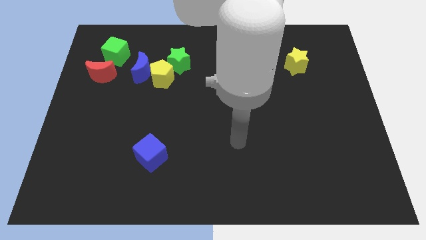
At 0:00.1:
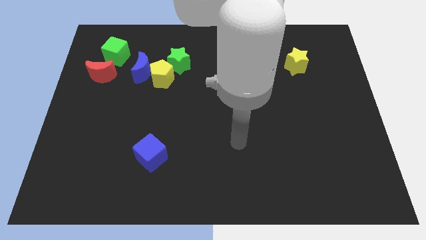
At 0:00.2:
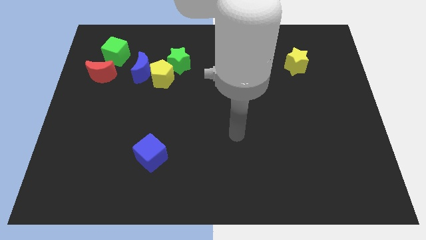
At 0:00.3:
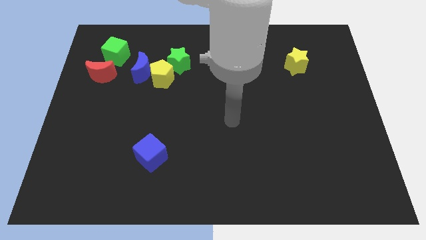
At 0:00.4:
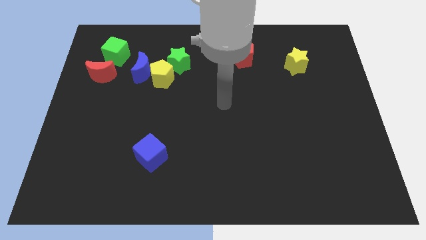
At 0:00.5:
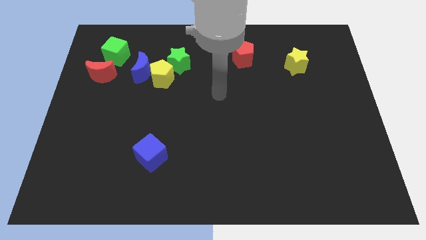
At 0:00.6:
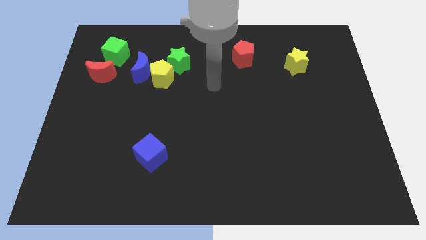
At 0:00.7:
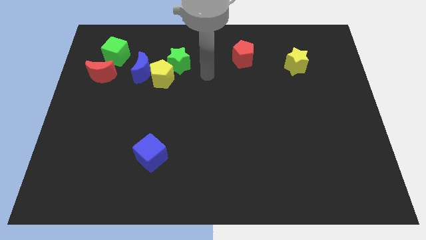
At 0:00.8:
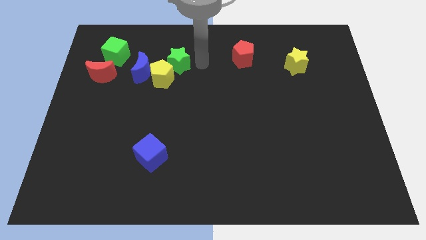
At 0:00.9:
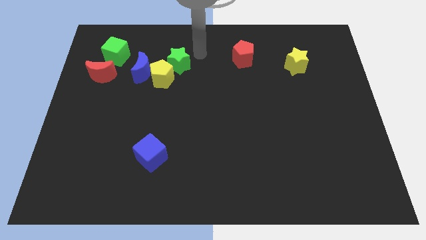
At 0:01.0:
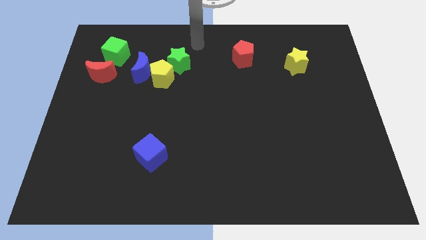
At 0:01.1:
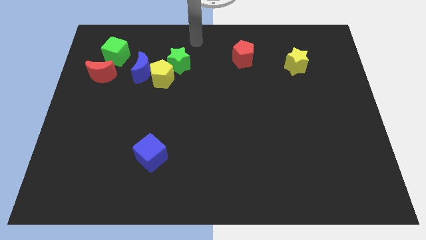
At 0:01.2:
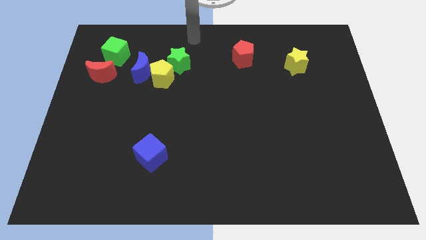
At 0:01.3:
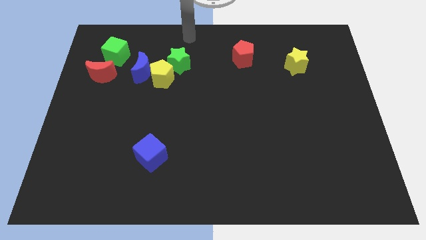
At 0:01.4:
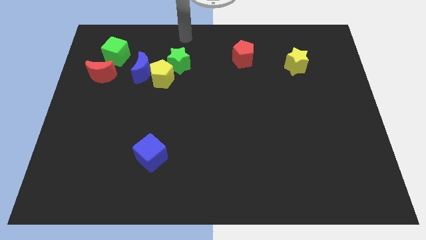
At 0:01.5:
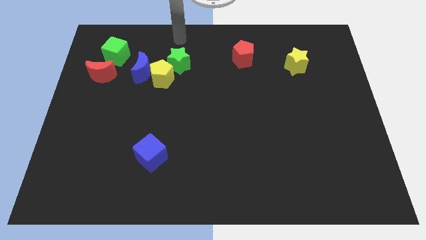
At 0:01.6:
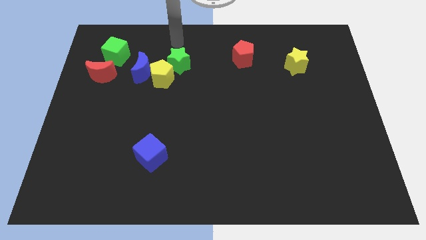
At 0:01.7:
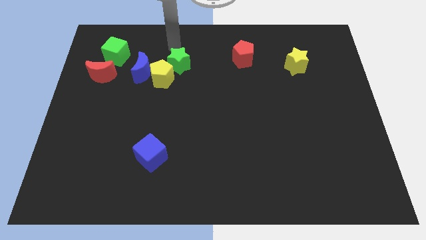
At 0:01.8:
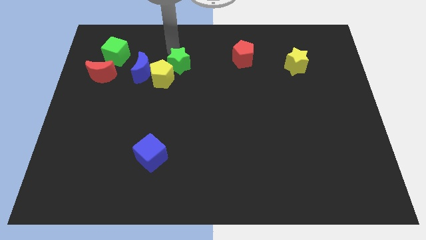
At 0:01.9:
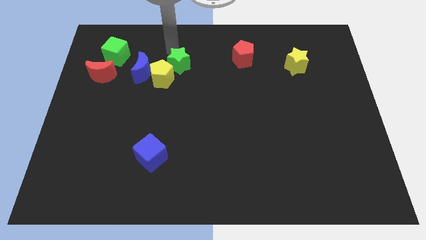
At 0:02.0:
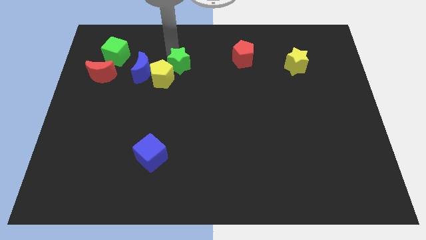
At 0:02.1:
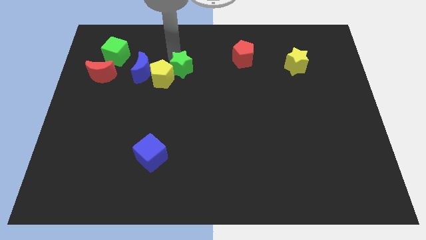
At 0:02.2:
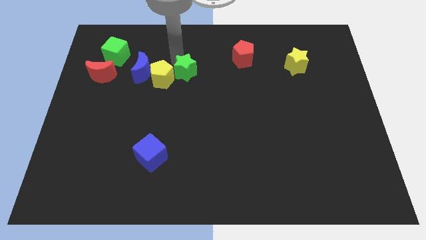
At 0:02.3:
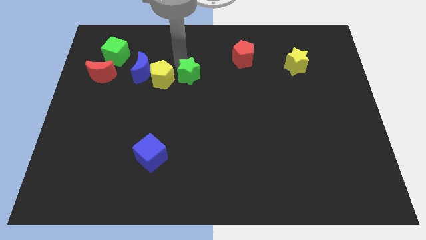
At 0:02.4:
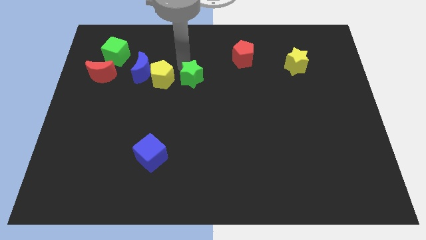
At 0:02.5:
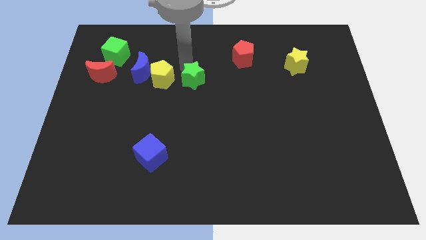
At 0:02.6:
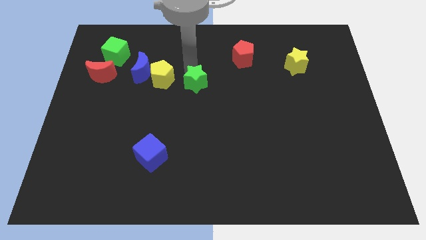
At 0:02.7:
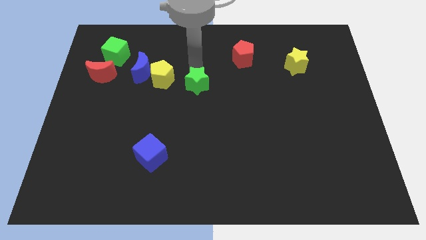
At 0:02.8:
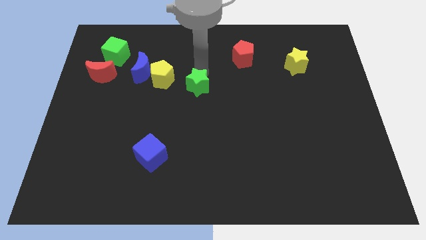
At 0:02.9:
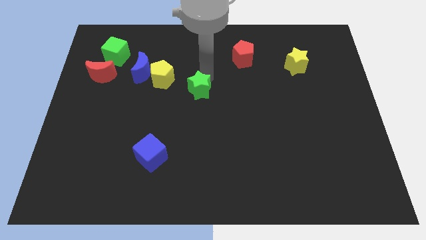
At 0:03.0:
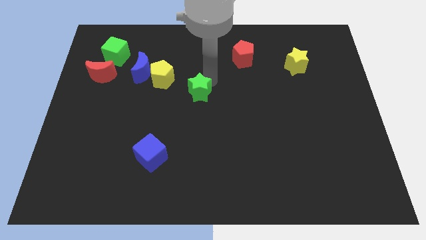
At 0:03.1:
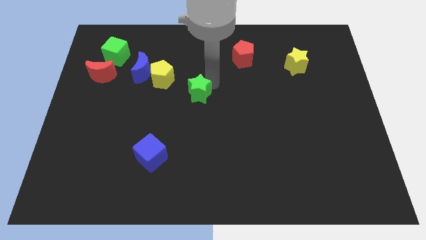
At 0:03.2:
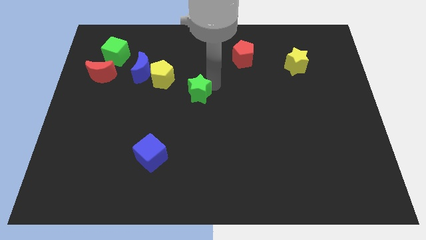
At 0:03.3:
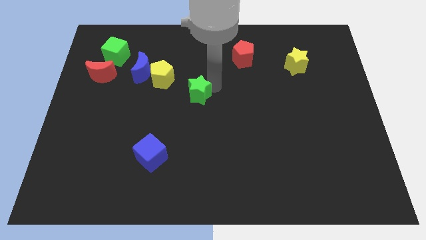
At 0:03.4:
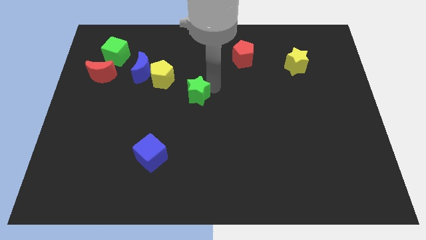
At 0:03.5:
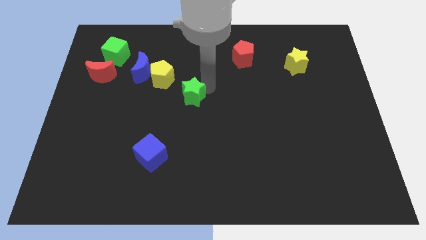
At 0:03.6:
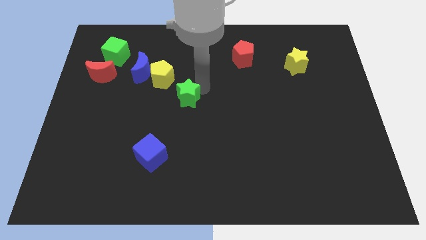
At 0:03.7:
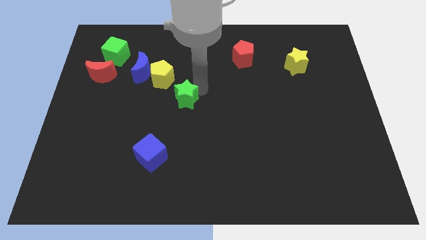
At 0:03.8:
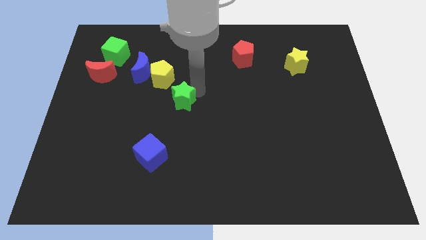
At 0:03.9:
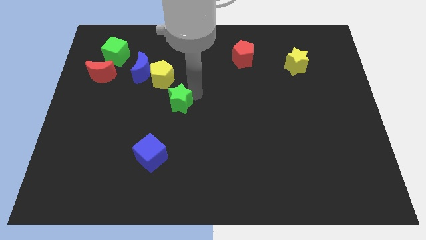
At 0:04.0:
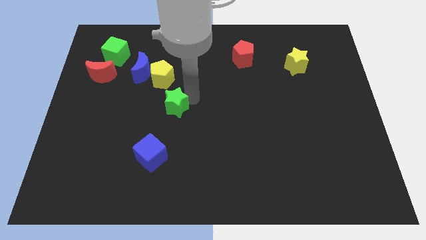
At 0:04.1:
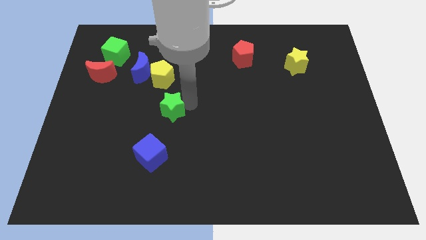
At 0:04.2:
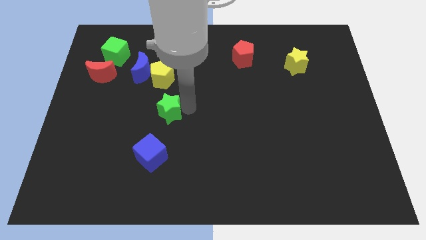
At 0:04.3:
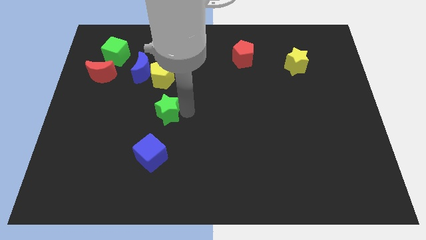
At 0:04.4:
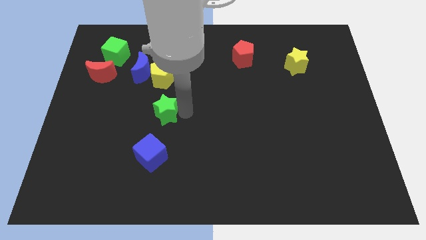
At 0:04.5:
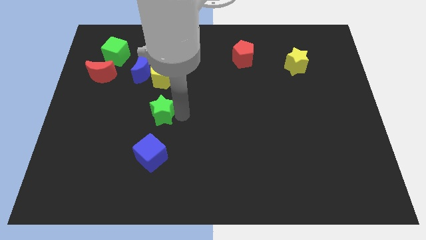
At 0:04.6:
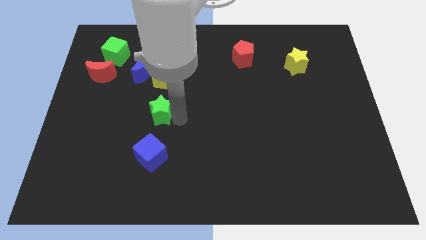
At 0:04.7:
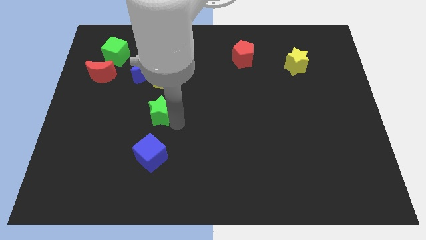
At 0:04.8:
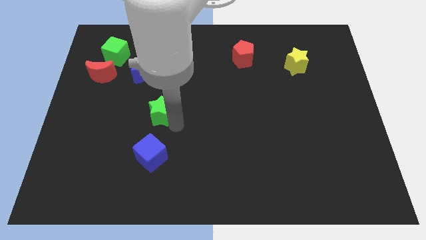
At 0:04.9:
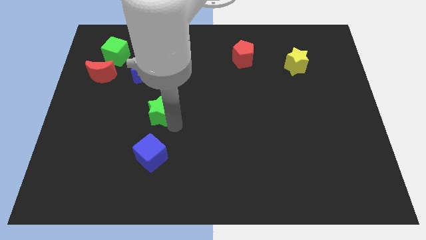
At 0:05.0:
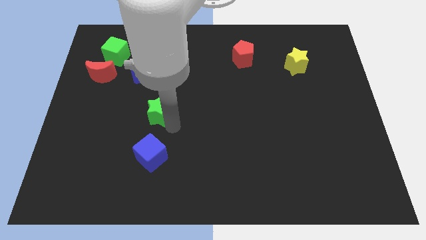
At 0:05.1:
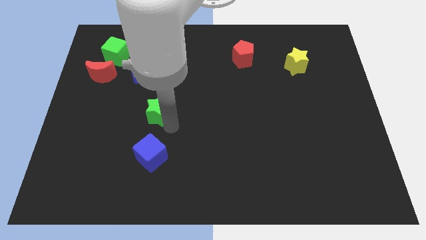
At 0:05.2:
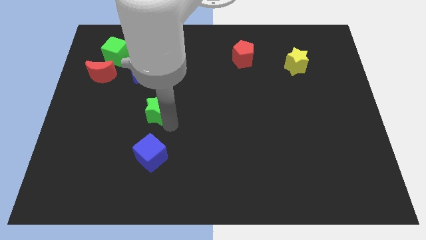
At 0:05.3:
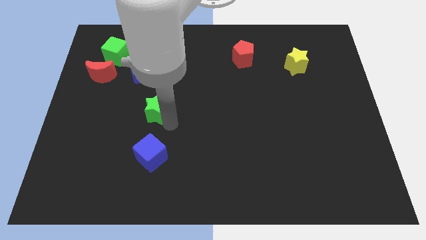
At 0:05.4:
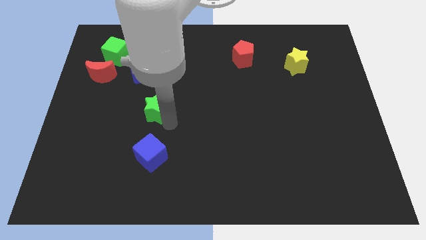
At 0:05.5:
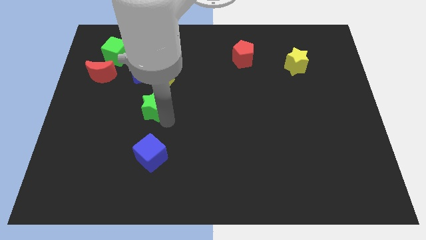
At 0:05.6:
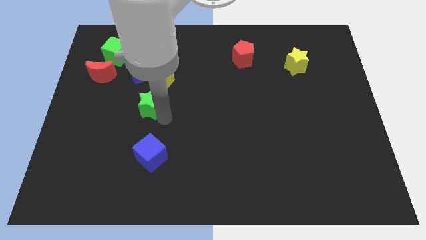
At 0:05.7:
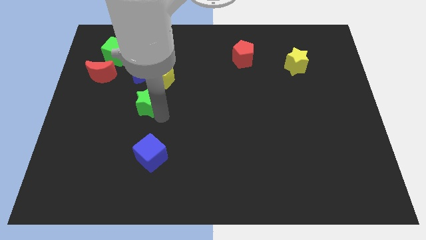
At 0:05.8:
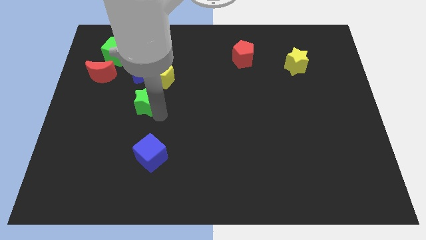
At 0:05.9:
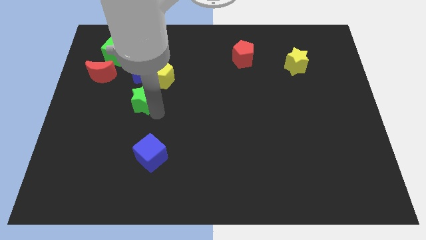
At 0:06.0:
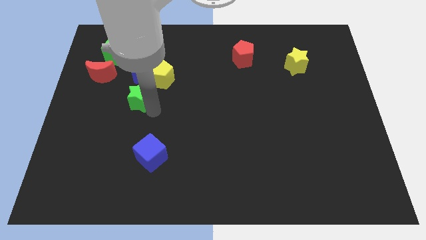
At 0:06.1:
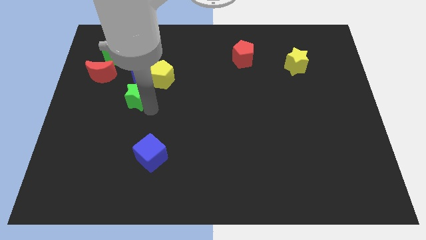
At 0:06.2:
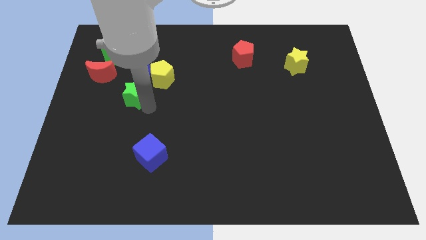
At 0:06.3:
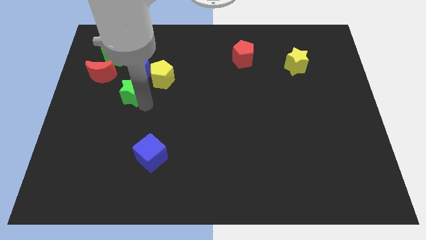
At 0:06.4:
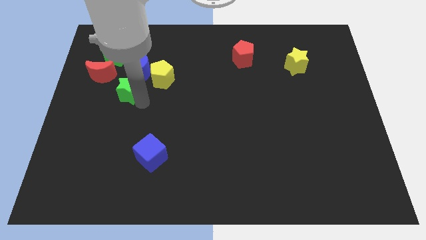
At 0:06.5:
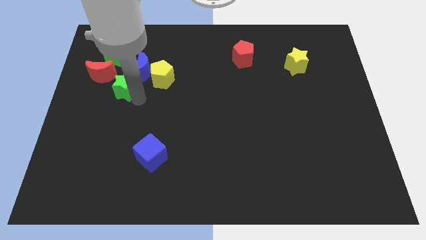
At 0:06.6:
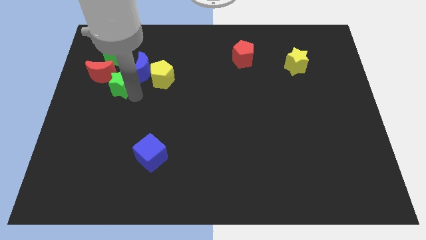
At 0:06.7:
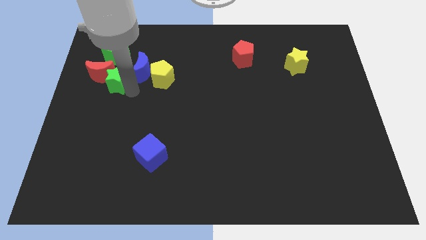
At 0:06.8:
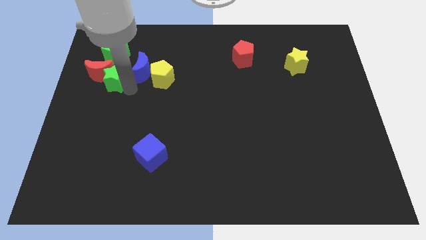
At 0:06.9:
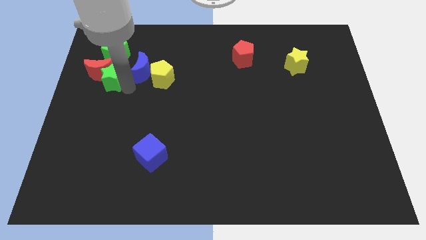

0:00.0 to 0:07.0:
push the green star towards the red moon

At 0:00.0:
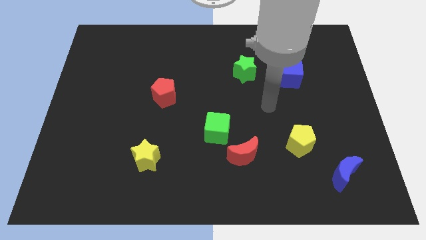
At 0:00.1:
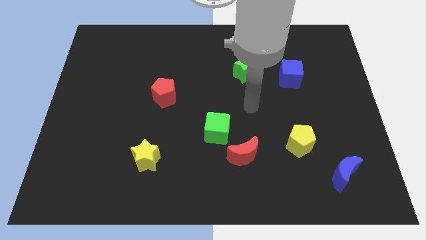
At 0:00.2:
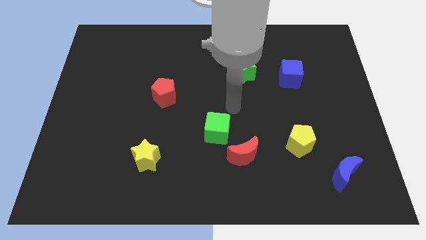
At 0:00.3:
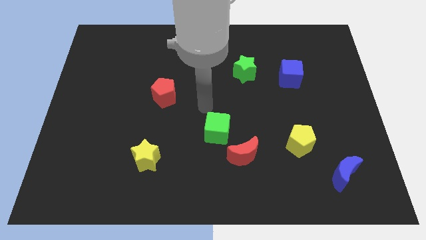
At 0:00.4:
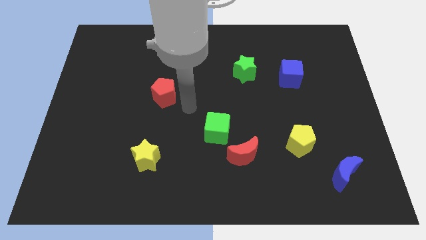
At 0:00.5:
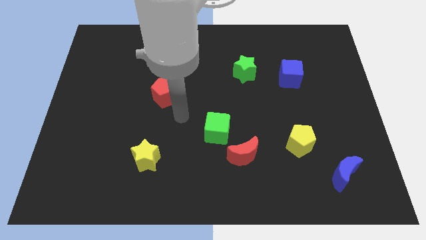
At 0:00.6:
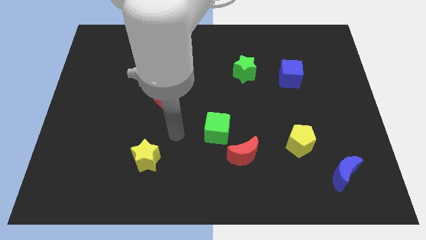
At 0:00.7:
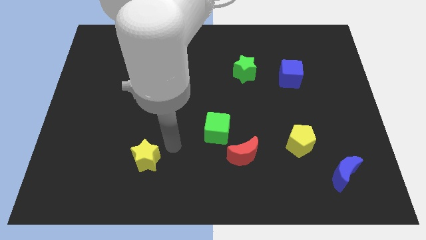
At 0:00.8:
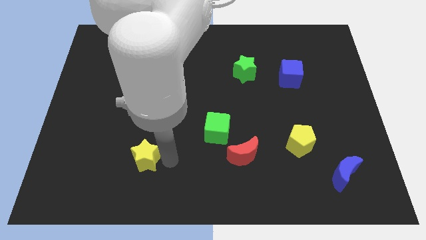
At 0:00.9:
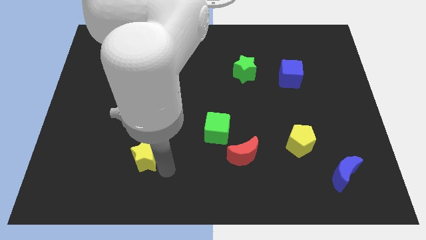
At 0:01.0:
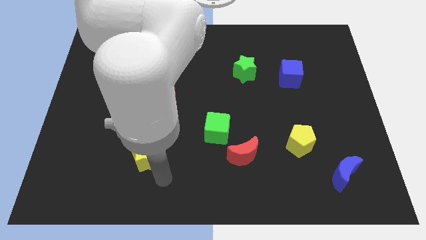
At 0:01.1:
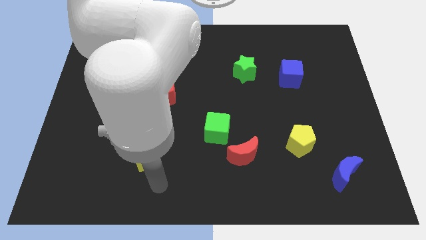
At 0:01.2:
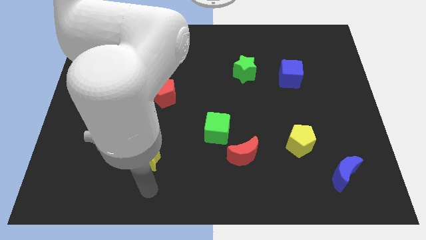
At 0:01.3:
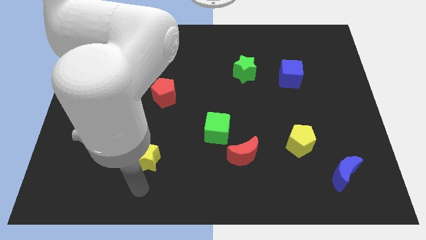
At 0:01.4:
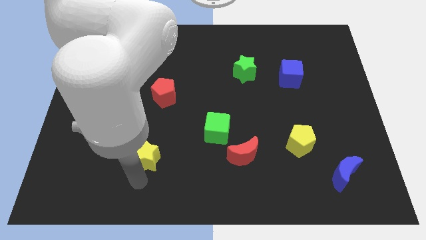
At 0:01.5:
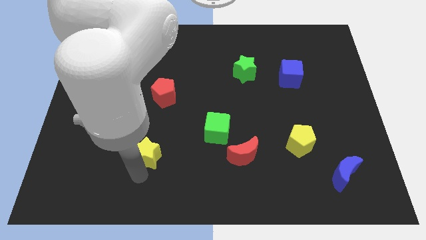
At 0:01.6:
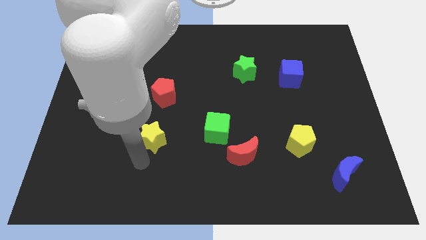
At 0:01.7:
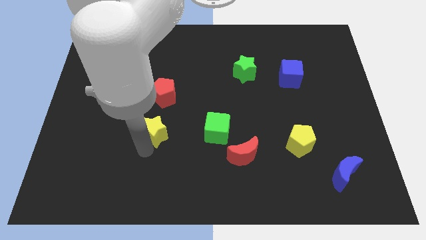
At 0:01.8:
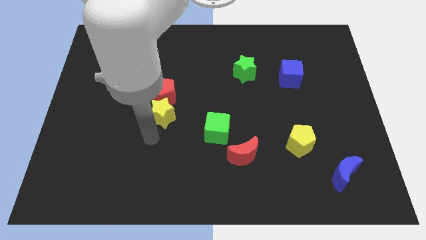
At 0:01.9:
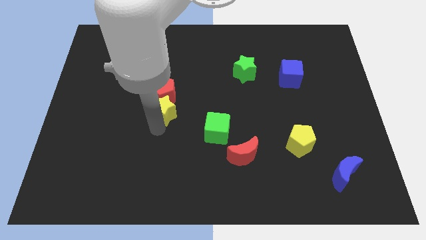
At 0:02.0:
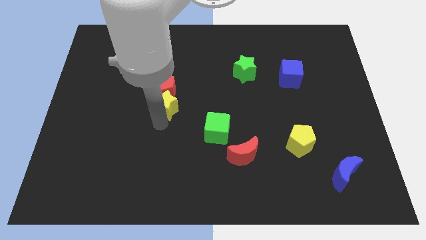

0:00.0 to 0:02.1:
put the yellow star close to the red pentagon
